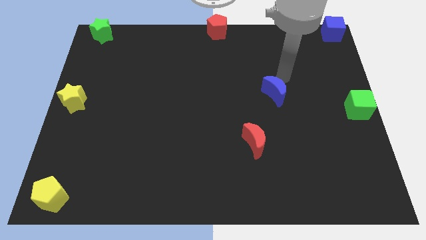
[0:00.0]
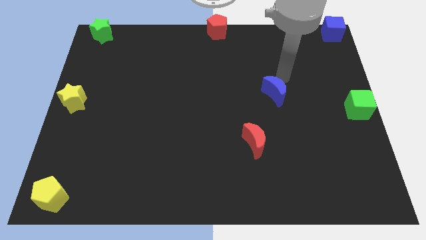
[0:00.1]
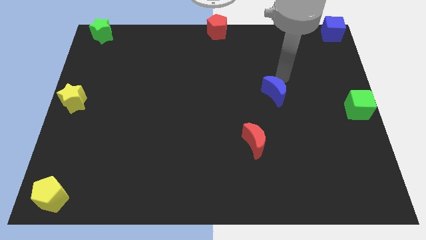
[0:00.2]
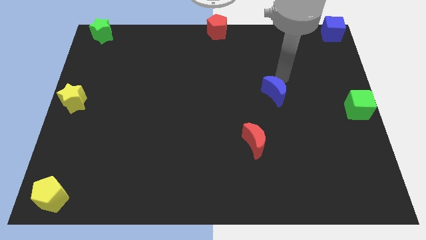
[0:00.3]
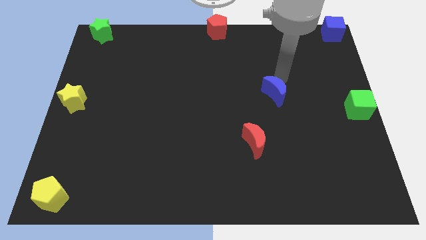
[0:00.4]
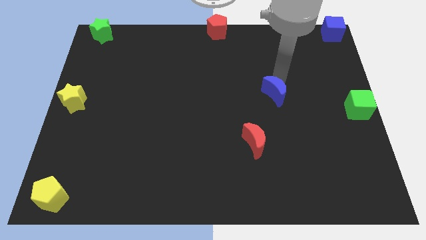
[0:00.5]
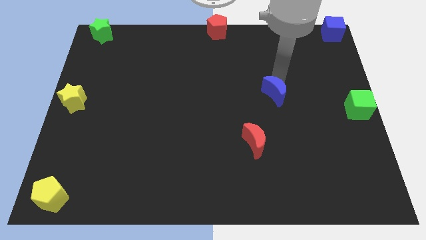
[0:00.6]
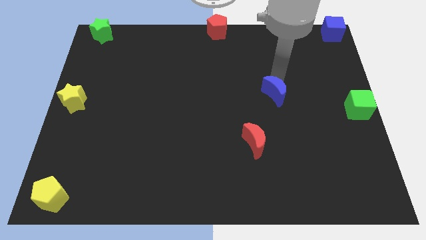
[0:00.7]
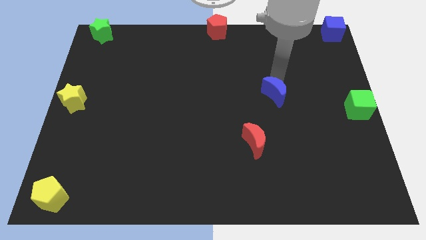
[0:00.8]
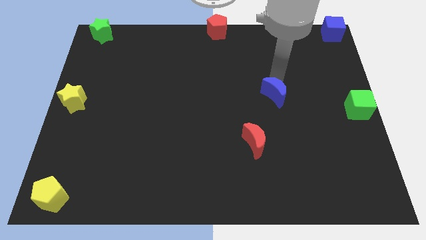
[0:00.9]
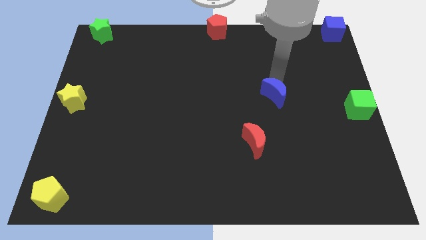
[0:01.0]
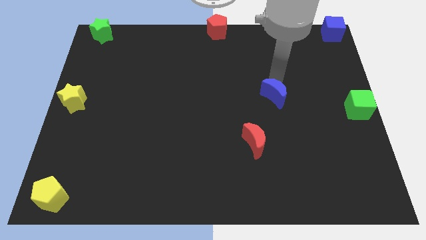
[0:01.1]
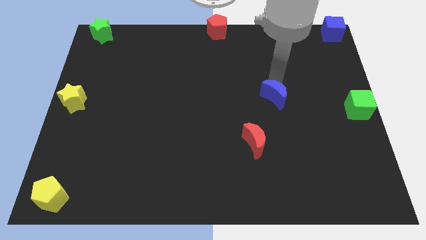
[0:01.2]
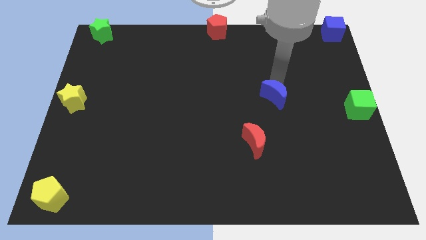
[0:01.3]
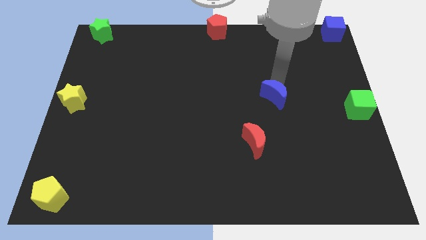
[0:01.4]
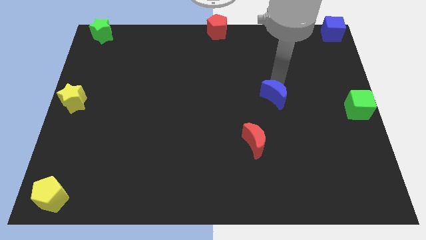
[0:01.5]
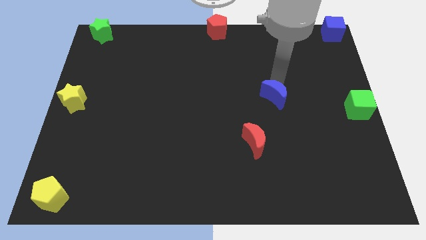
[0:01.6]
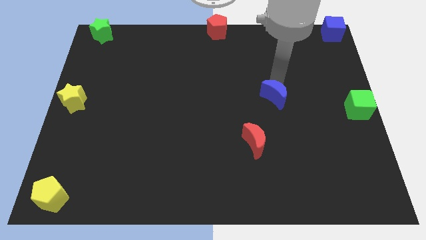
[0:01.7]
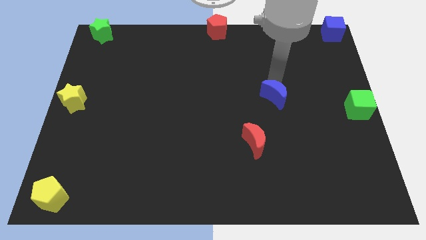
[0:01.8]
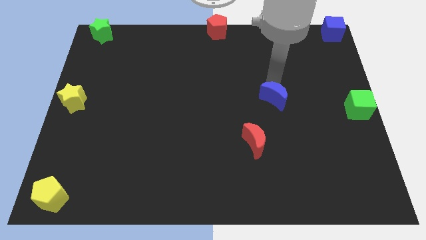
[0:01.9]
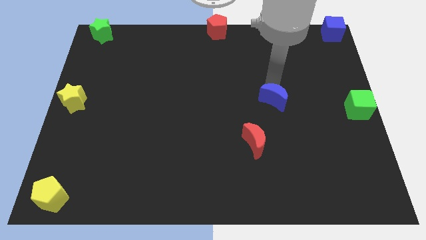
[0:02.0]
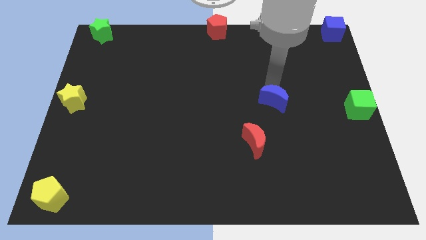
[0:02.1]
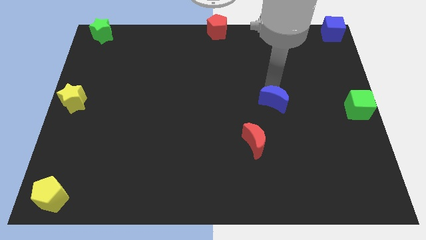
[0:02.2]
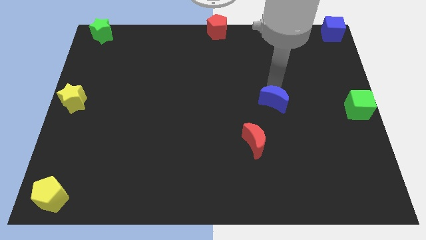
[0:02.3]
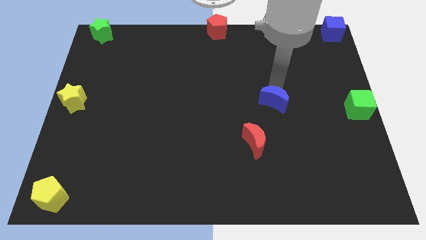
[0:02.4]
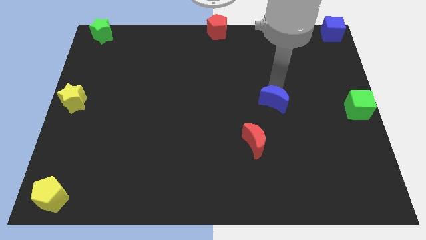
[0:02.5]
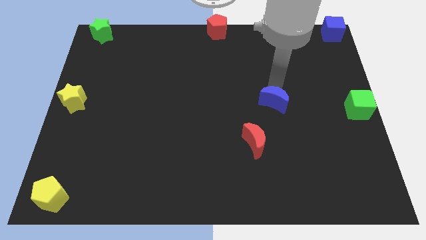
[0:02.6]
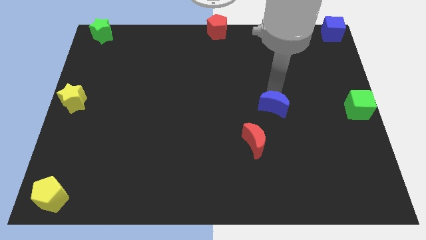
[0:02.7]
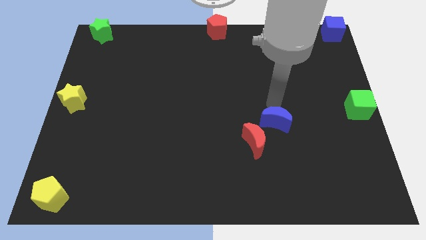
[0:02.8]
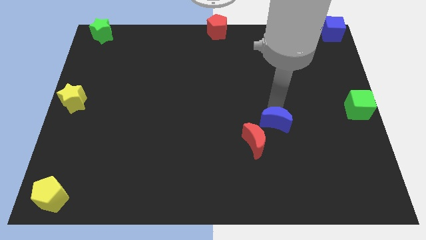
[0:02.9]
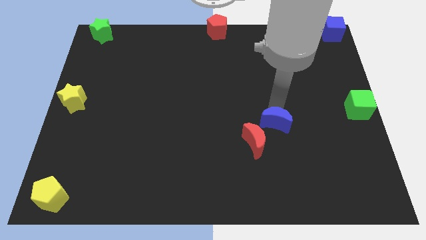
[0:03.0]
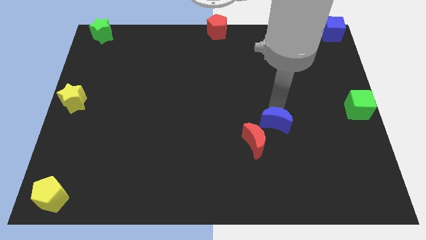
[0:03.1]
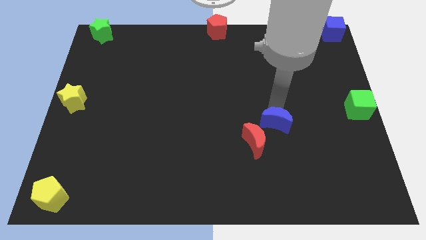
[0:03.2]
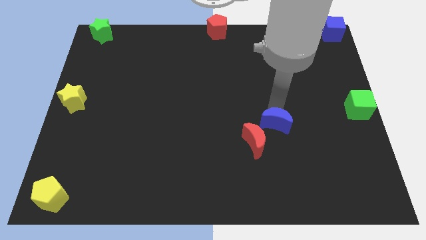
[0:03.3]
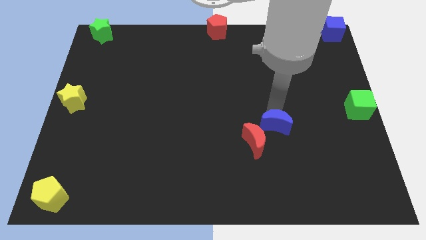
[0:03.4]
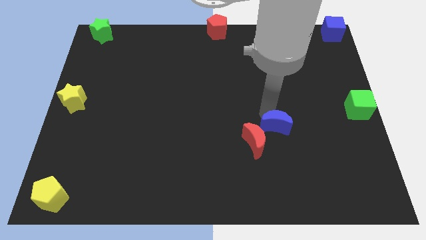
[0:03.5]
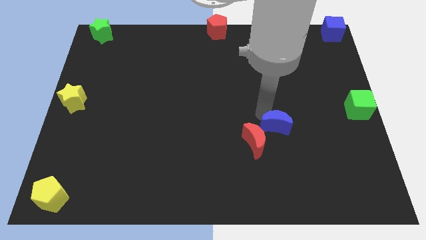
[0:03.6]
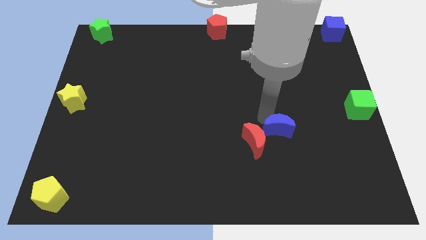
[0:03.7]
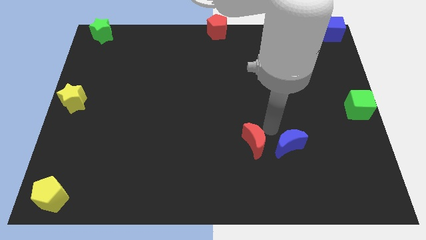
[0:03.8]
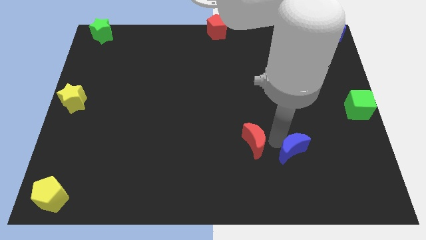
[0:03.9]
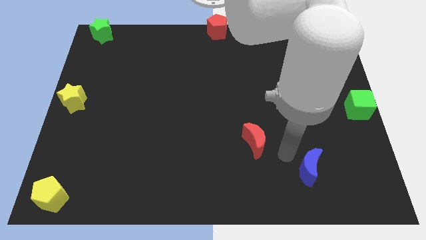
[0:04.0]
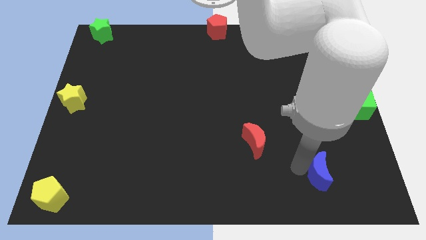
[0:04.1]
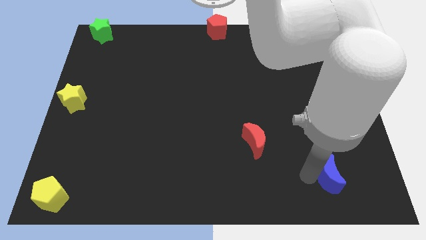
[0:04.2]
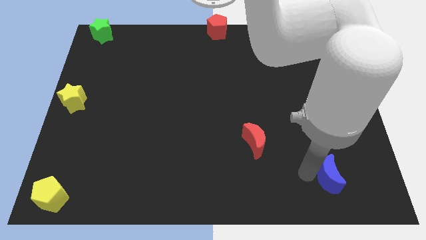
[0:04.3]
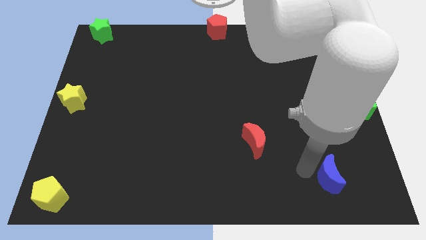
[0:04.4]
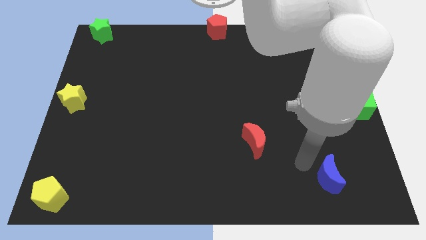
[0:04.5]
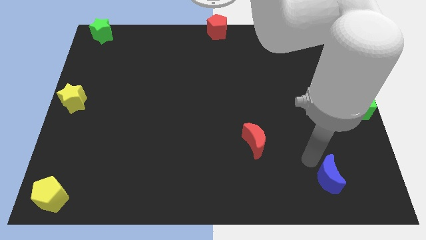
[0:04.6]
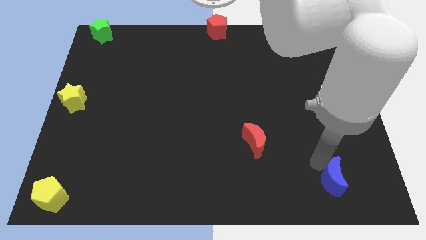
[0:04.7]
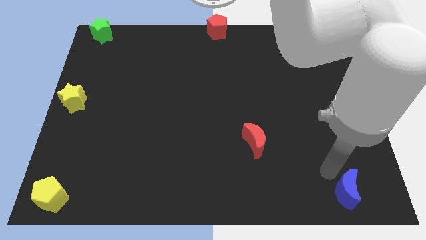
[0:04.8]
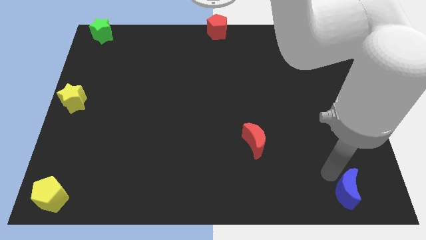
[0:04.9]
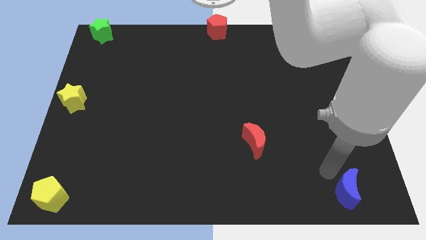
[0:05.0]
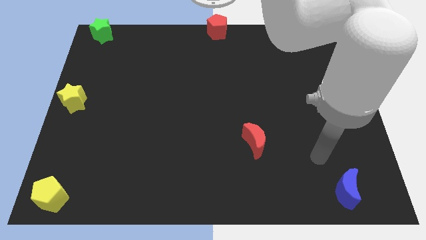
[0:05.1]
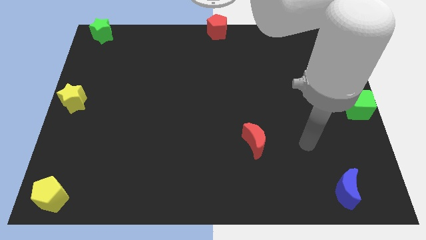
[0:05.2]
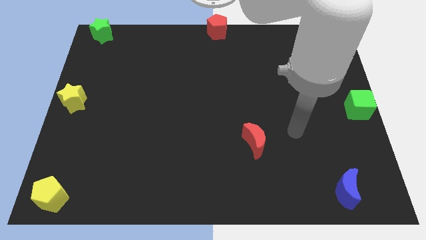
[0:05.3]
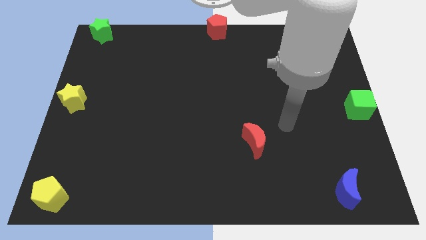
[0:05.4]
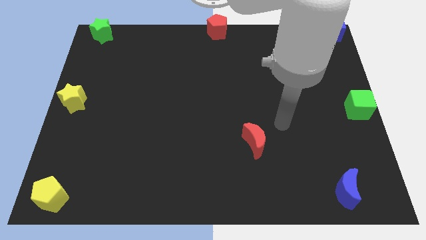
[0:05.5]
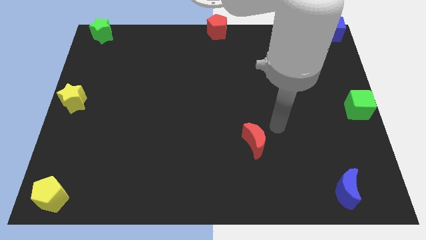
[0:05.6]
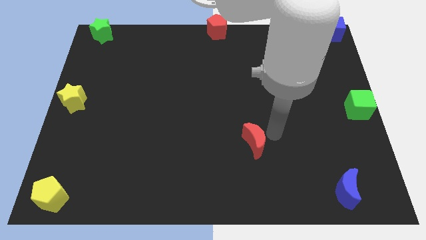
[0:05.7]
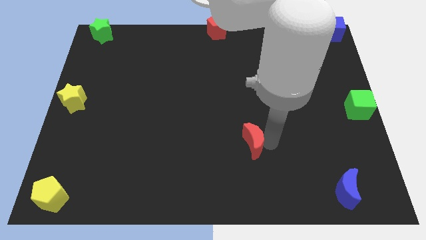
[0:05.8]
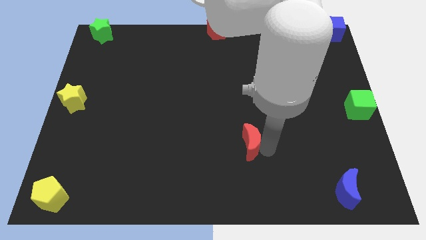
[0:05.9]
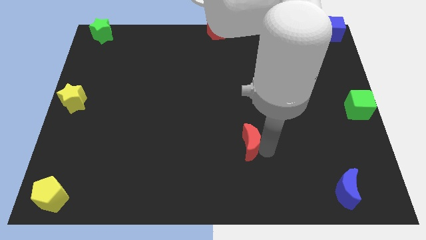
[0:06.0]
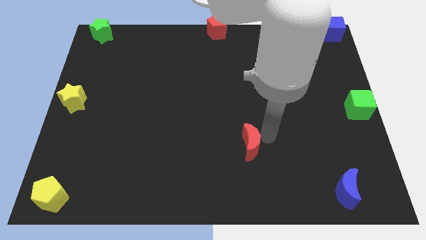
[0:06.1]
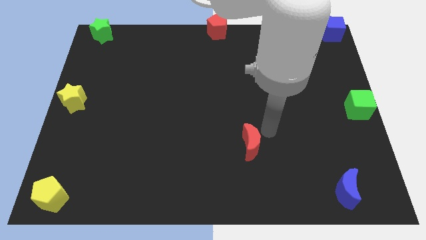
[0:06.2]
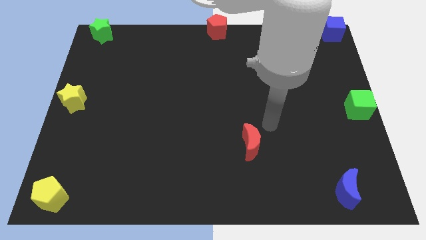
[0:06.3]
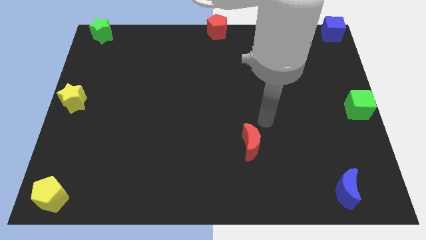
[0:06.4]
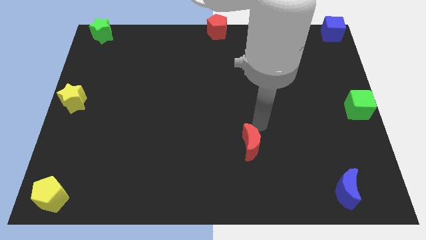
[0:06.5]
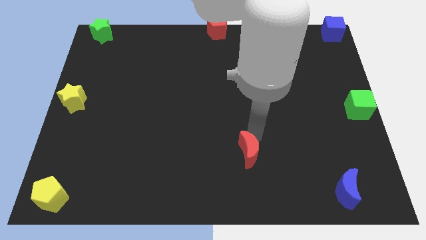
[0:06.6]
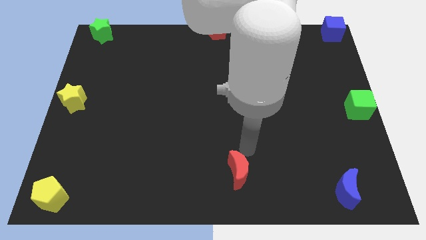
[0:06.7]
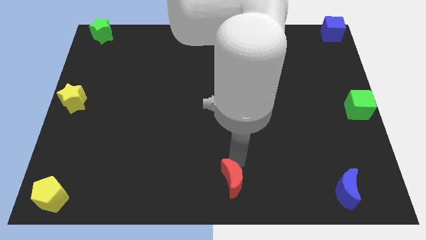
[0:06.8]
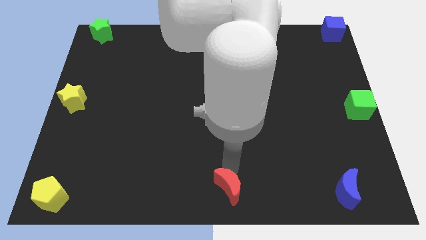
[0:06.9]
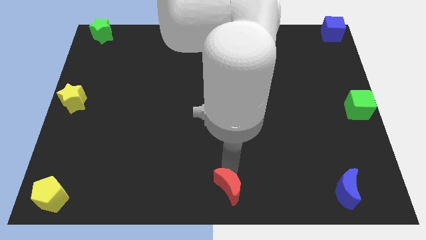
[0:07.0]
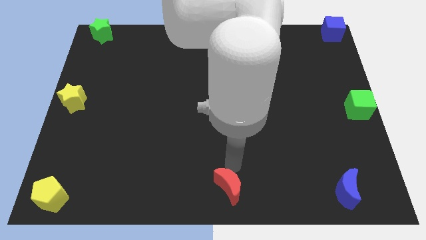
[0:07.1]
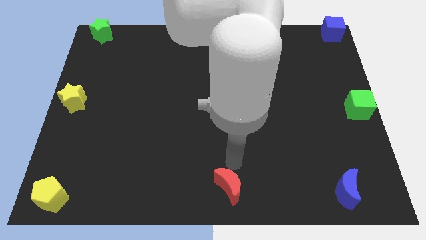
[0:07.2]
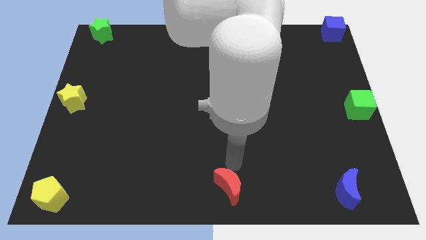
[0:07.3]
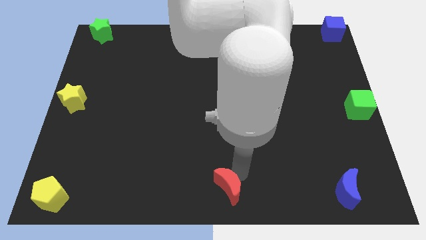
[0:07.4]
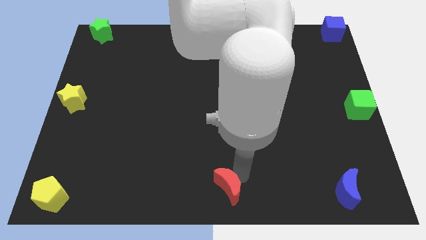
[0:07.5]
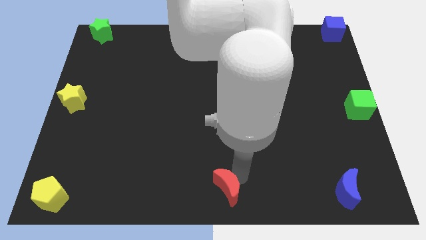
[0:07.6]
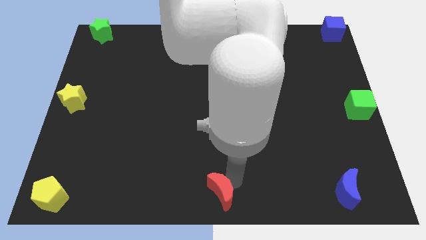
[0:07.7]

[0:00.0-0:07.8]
place the red crescent to the bottom center of the board

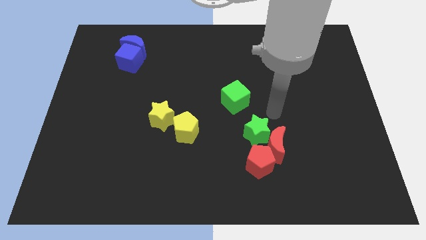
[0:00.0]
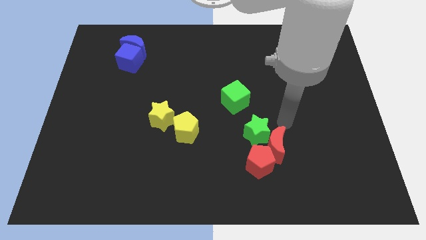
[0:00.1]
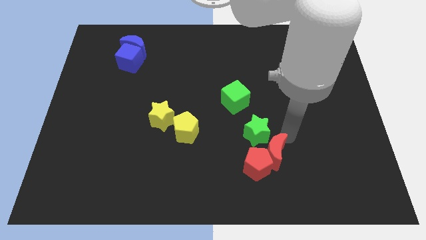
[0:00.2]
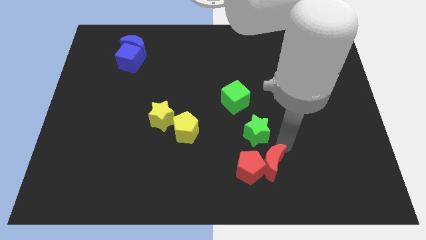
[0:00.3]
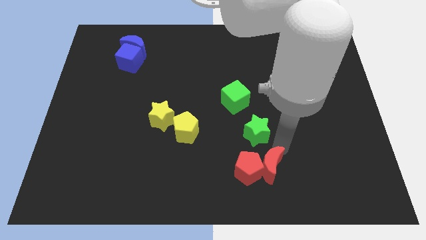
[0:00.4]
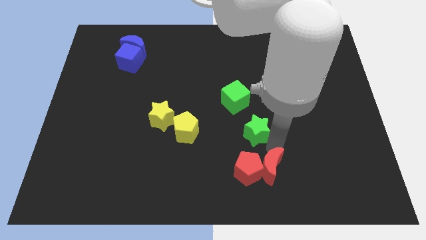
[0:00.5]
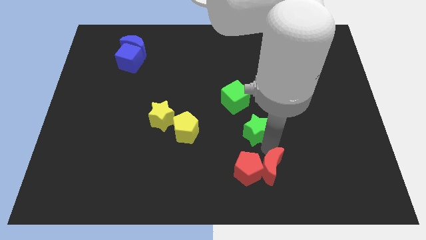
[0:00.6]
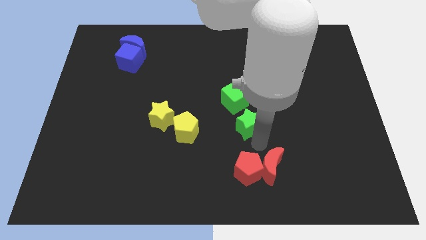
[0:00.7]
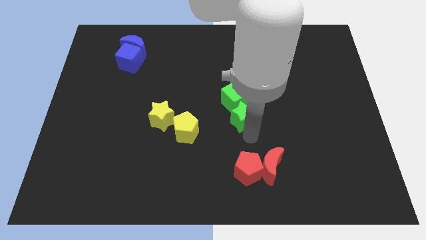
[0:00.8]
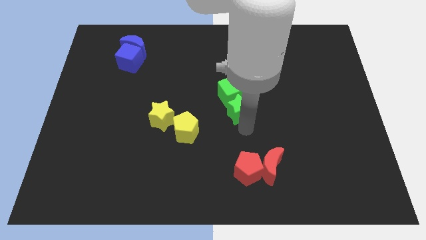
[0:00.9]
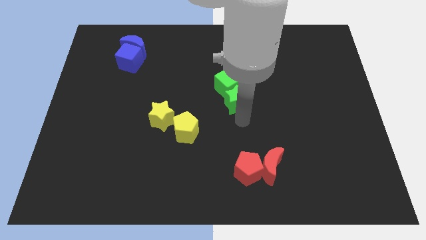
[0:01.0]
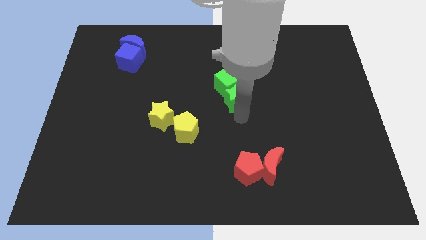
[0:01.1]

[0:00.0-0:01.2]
push the green cube with the help of green star

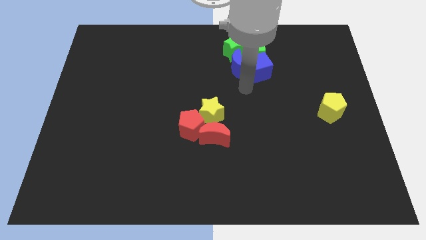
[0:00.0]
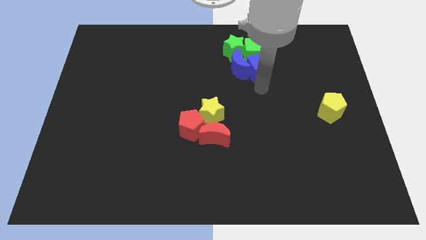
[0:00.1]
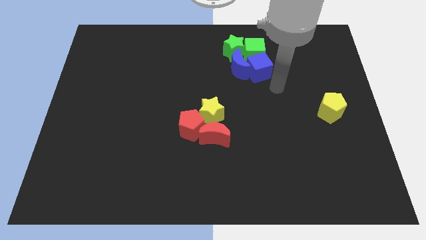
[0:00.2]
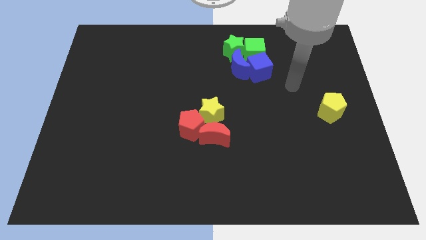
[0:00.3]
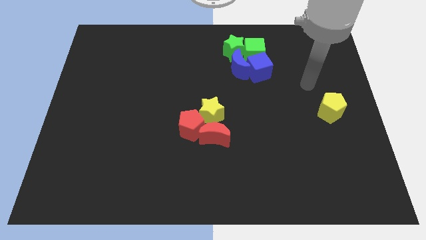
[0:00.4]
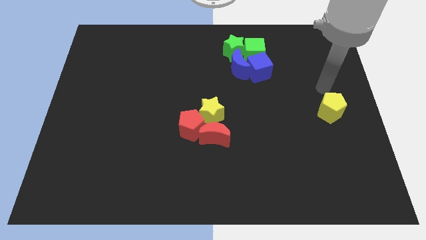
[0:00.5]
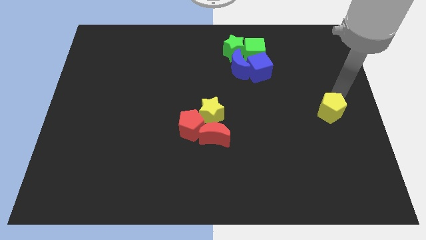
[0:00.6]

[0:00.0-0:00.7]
move the arm towards the top of the yellow pentagon
